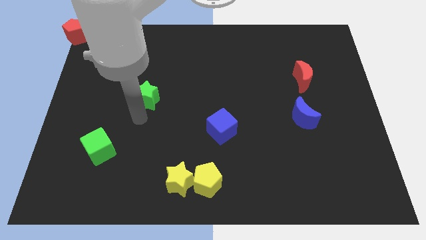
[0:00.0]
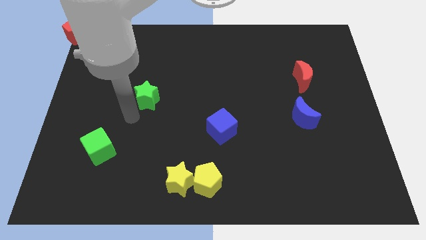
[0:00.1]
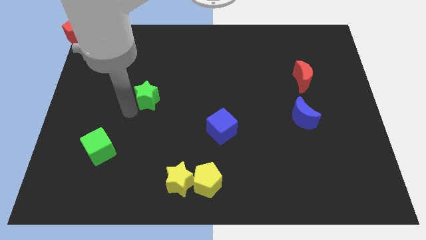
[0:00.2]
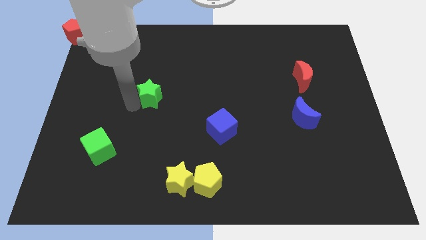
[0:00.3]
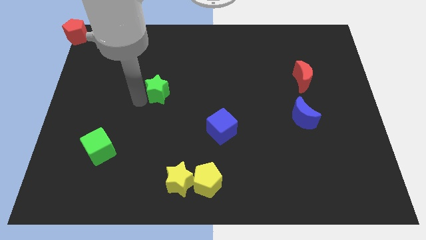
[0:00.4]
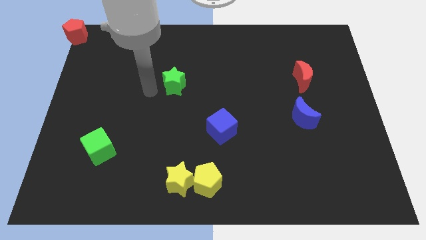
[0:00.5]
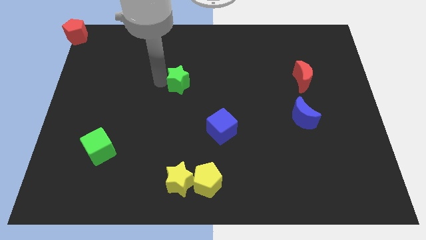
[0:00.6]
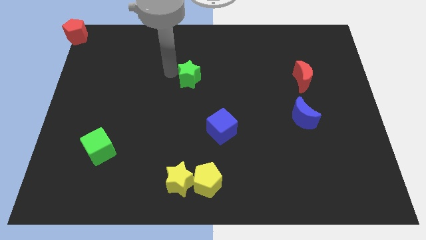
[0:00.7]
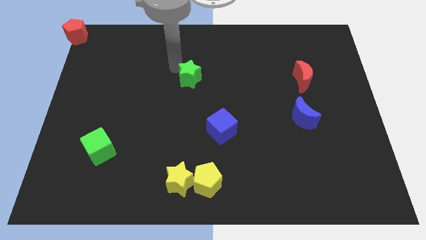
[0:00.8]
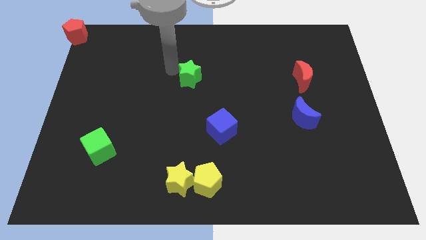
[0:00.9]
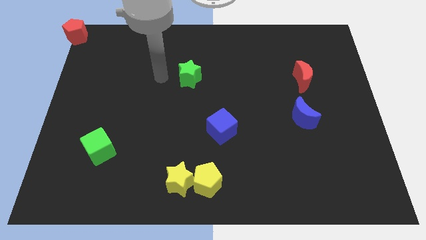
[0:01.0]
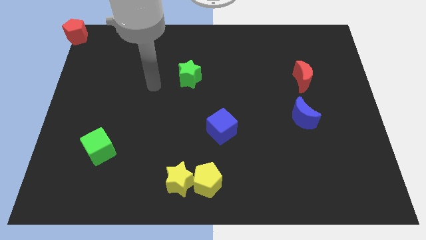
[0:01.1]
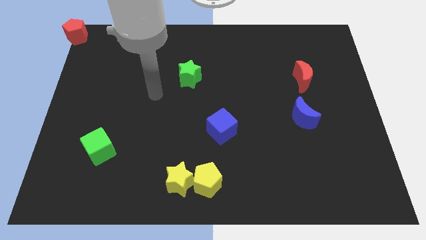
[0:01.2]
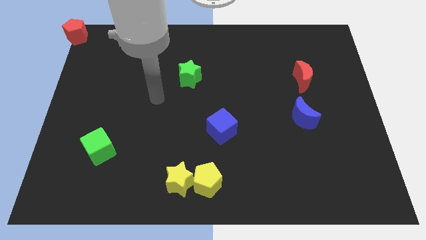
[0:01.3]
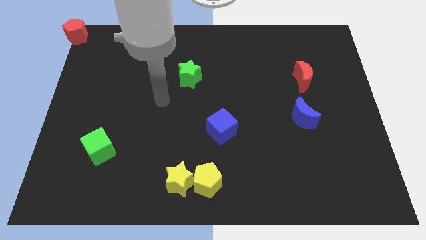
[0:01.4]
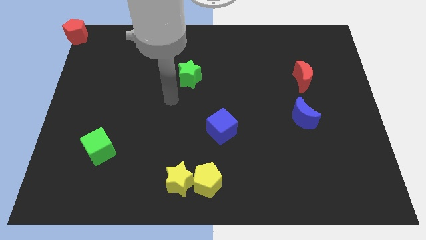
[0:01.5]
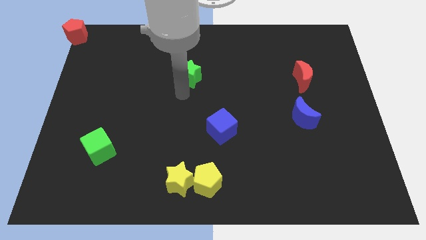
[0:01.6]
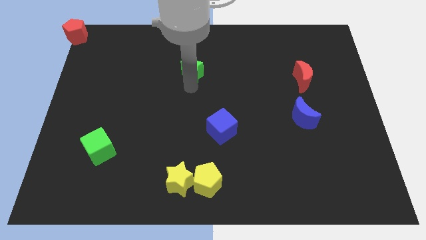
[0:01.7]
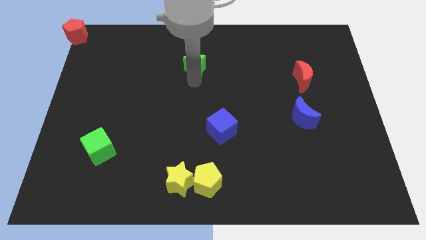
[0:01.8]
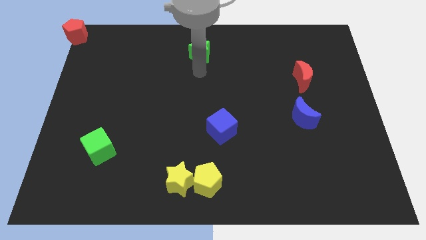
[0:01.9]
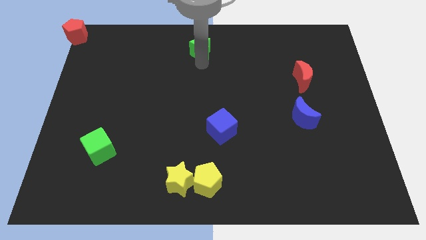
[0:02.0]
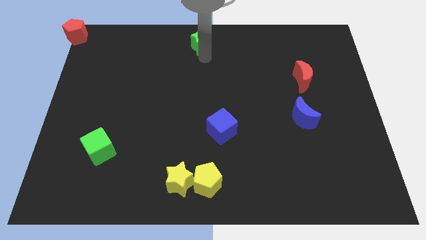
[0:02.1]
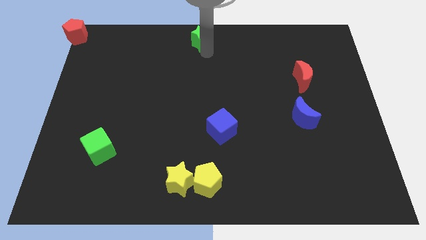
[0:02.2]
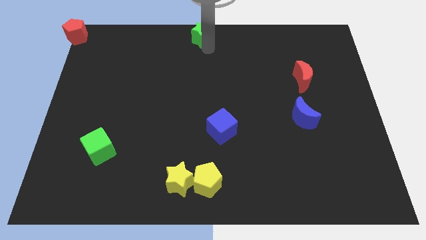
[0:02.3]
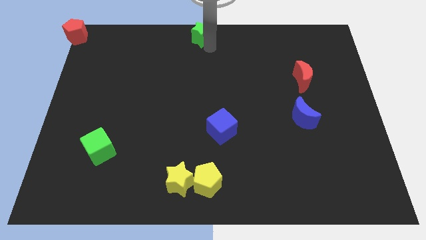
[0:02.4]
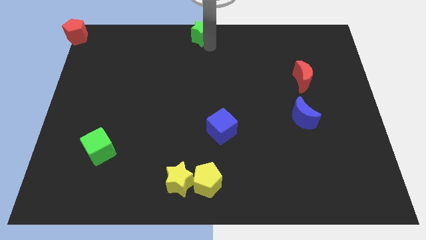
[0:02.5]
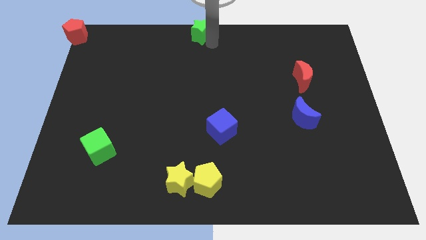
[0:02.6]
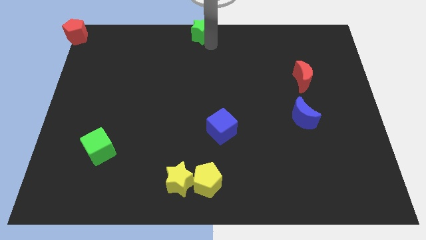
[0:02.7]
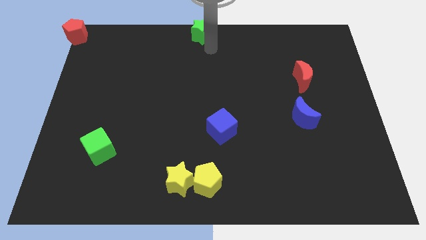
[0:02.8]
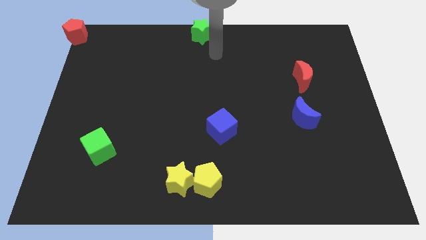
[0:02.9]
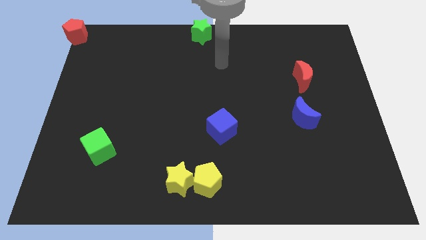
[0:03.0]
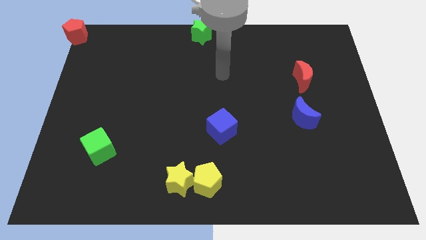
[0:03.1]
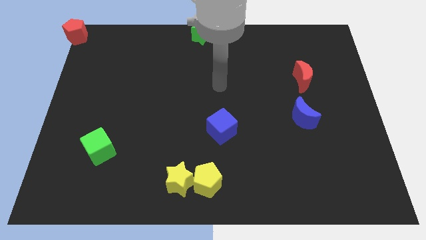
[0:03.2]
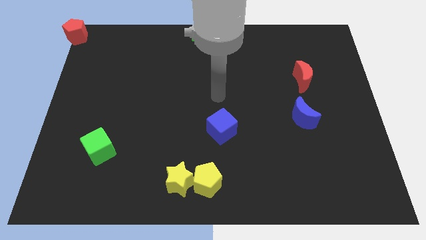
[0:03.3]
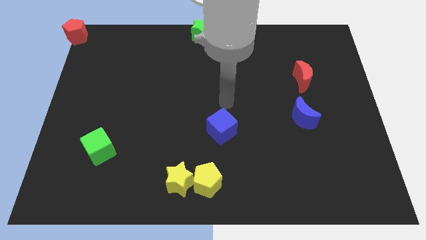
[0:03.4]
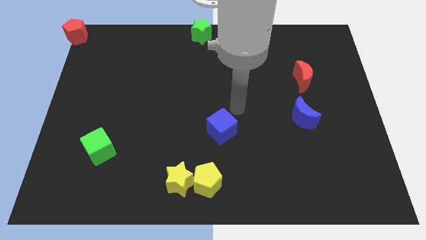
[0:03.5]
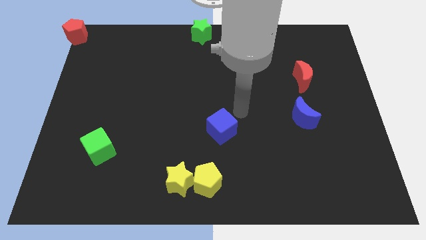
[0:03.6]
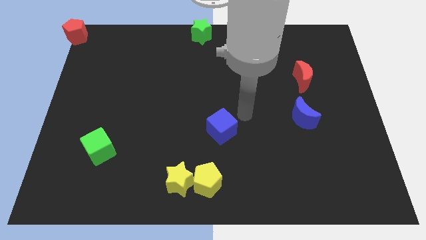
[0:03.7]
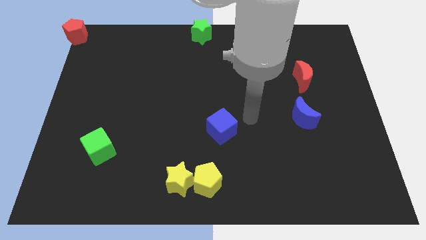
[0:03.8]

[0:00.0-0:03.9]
place the green star at the top center of the board

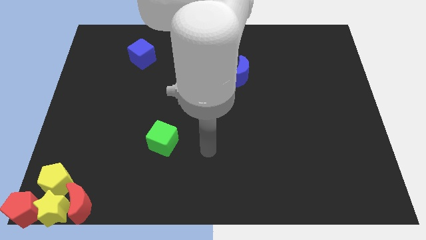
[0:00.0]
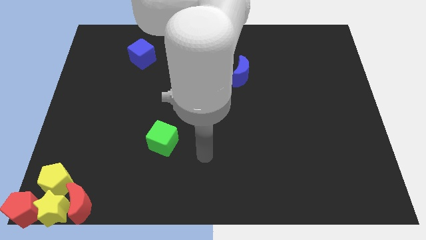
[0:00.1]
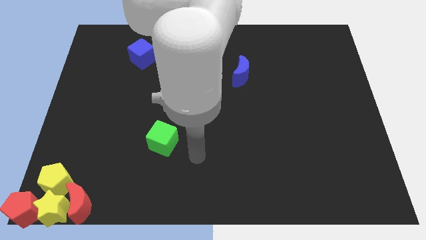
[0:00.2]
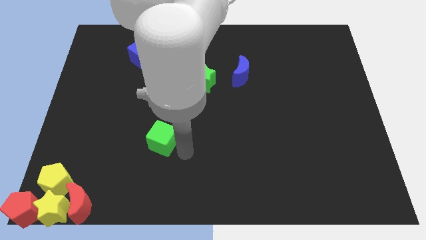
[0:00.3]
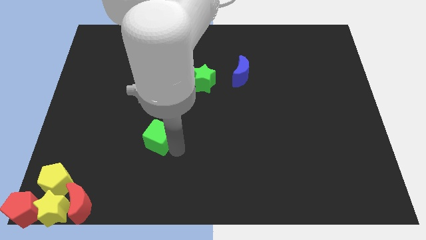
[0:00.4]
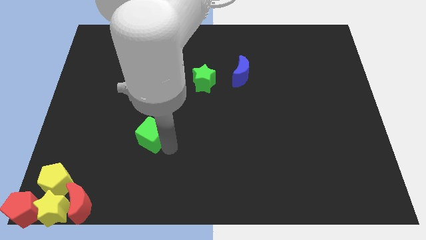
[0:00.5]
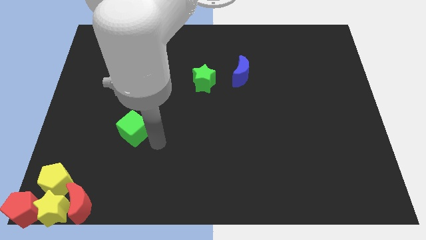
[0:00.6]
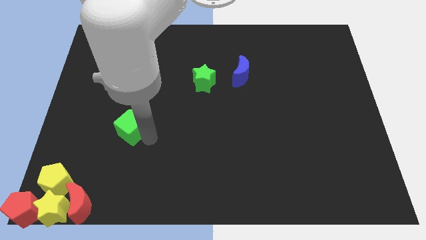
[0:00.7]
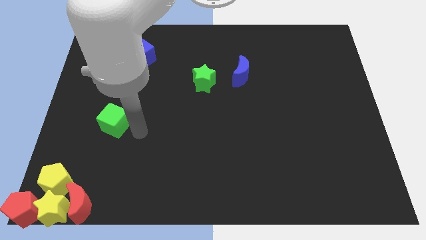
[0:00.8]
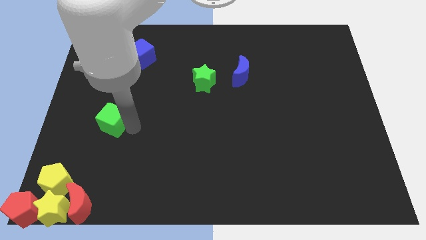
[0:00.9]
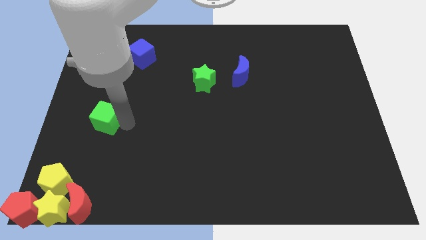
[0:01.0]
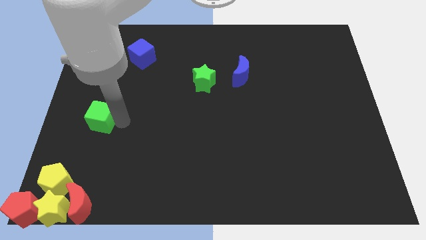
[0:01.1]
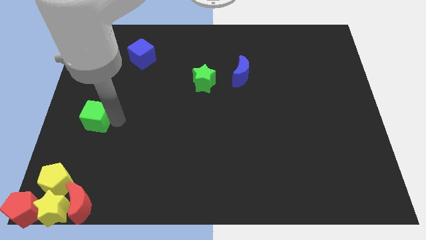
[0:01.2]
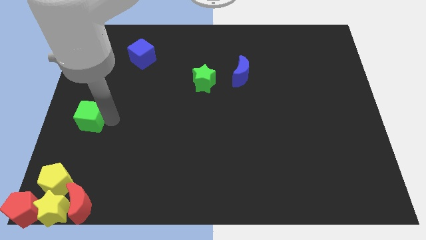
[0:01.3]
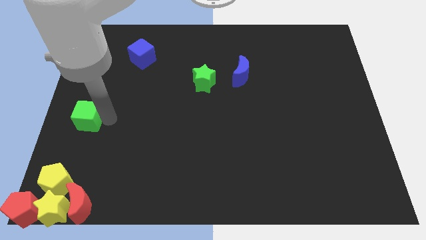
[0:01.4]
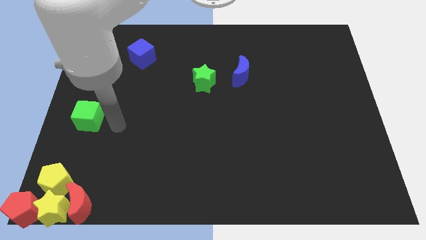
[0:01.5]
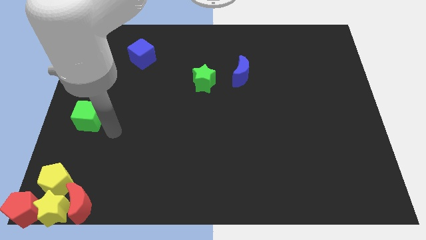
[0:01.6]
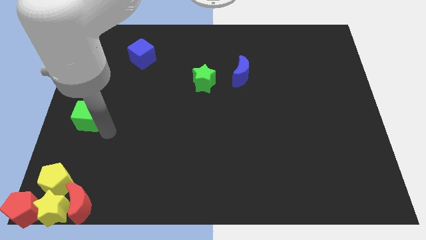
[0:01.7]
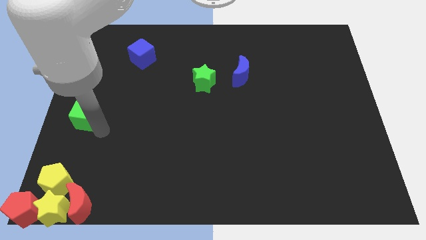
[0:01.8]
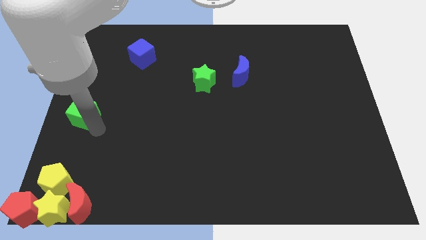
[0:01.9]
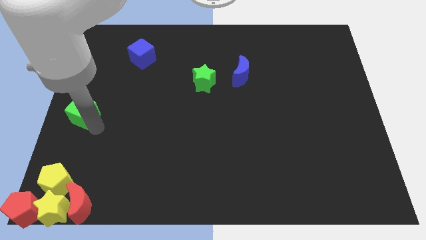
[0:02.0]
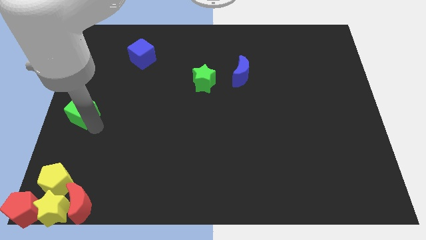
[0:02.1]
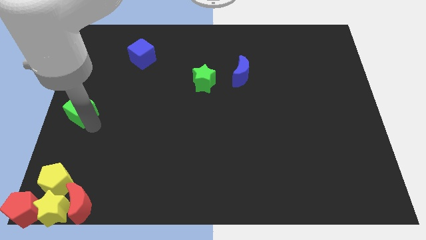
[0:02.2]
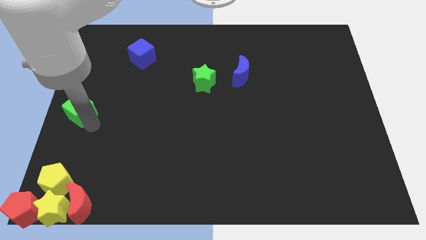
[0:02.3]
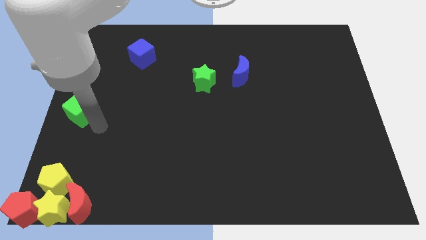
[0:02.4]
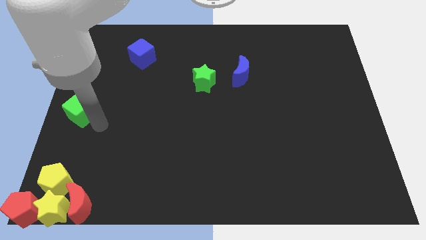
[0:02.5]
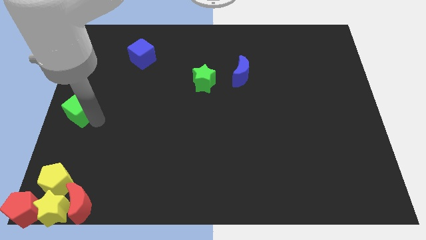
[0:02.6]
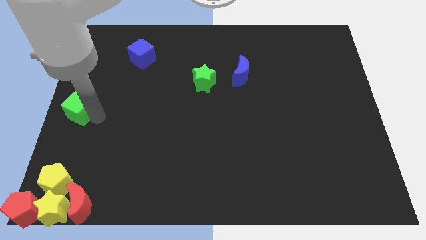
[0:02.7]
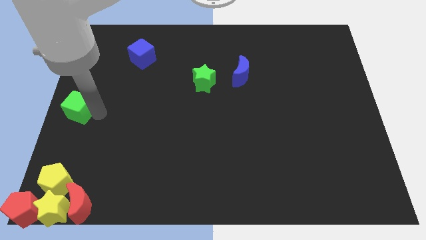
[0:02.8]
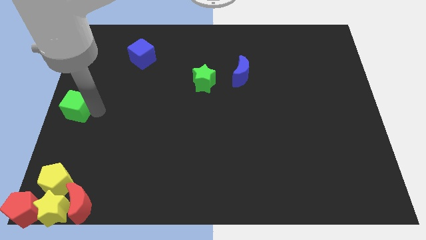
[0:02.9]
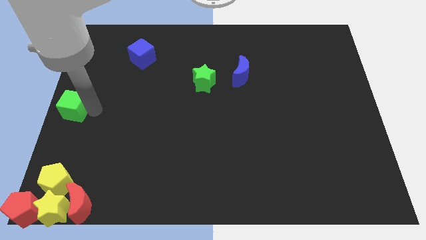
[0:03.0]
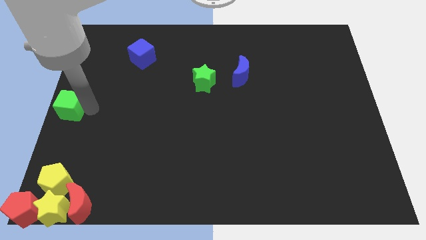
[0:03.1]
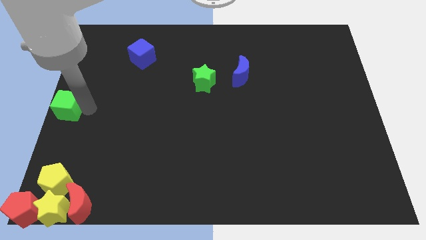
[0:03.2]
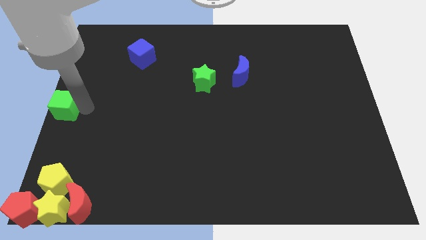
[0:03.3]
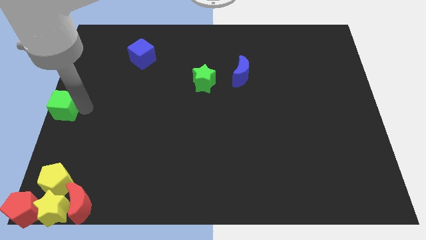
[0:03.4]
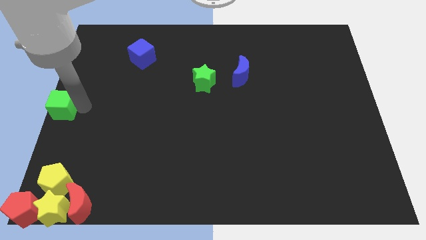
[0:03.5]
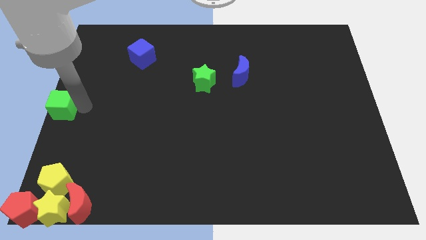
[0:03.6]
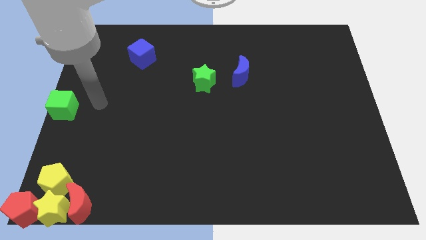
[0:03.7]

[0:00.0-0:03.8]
push the green cube vertically at the top side of the yellow pentagon

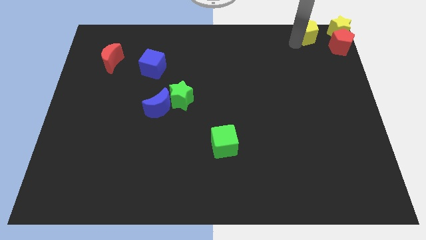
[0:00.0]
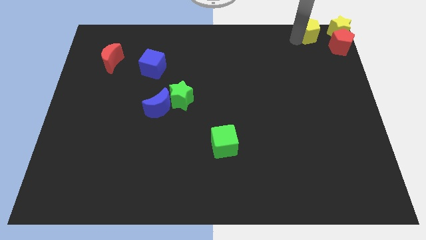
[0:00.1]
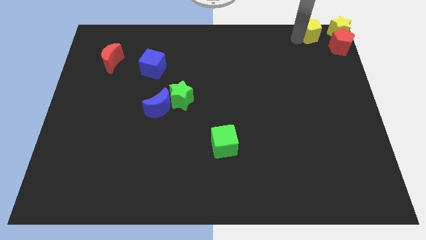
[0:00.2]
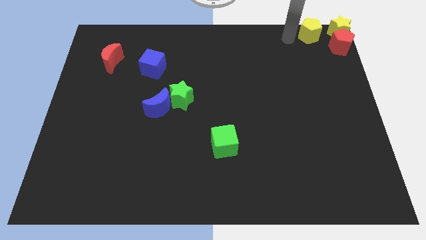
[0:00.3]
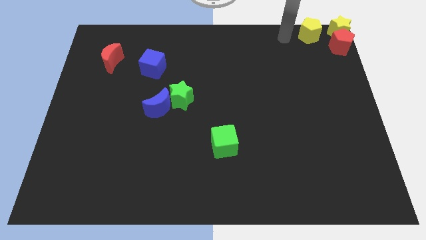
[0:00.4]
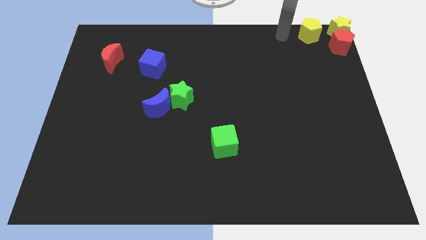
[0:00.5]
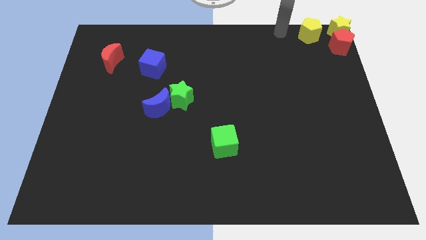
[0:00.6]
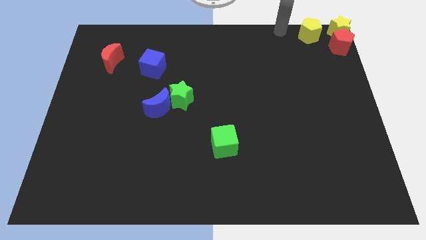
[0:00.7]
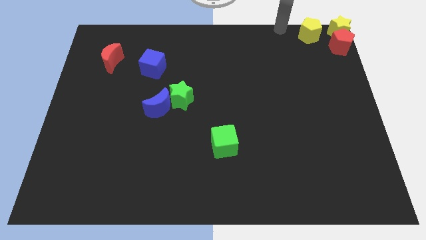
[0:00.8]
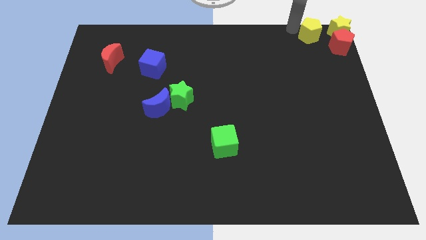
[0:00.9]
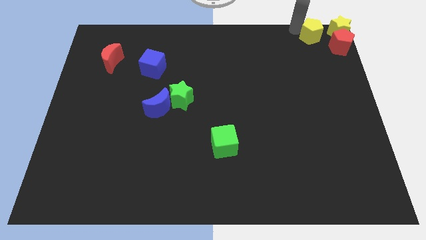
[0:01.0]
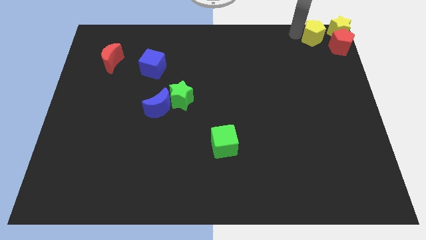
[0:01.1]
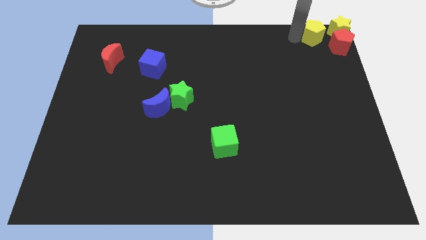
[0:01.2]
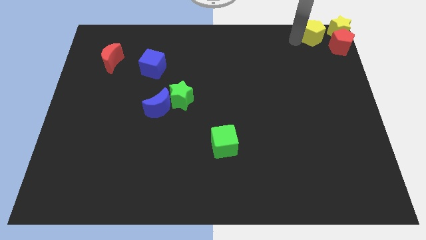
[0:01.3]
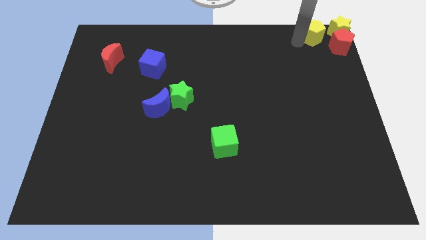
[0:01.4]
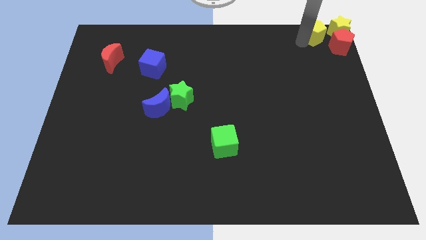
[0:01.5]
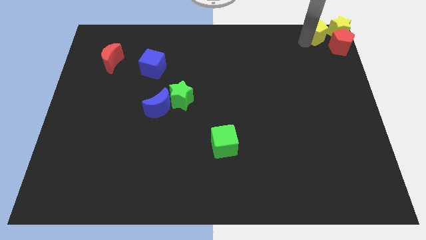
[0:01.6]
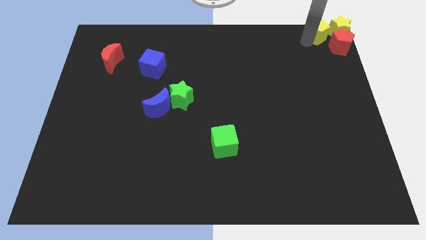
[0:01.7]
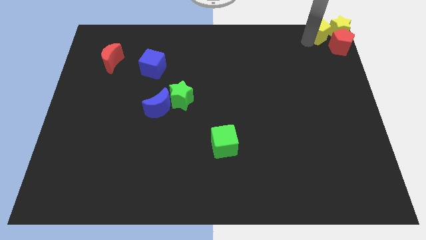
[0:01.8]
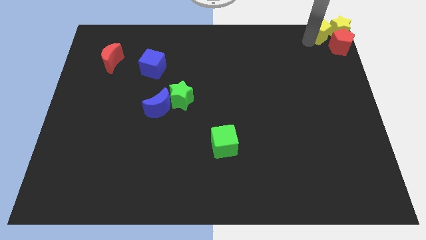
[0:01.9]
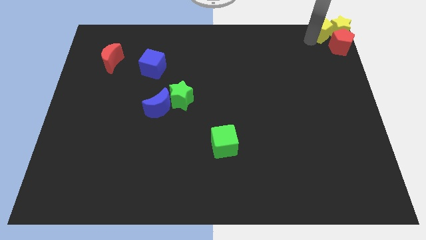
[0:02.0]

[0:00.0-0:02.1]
push the yellow pentagon to the left of the yellow star
